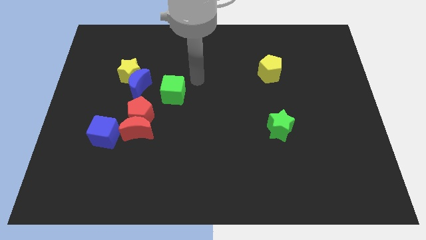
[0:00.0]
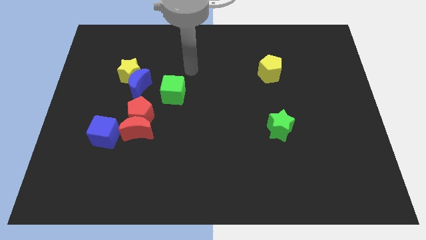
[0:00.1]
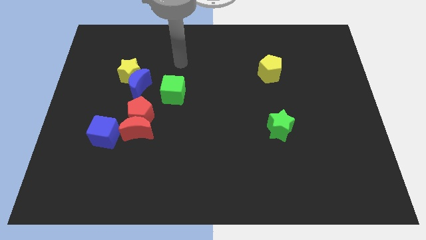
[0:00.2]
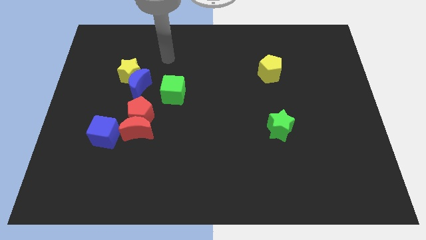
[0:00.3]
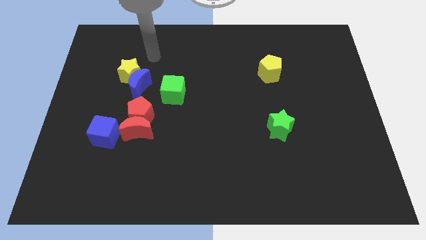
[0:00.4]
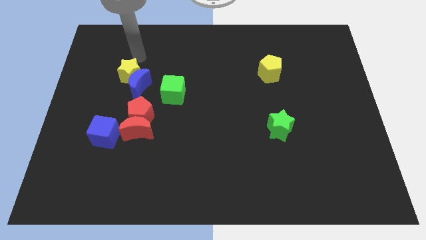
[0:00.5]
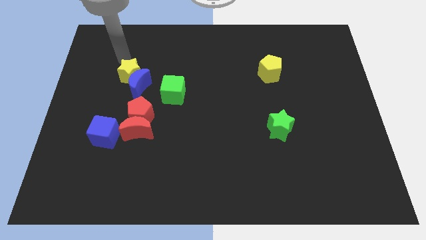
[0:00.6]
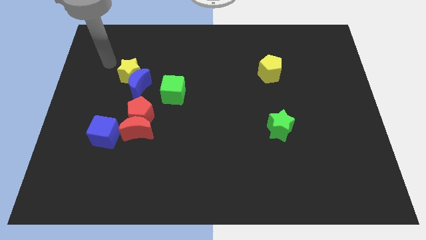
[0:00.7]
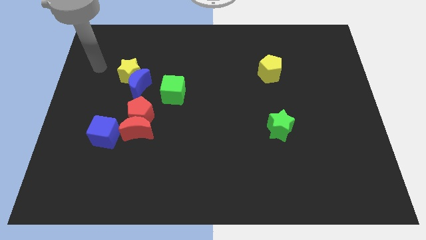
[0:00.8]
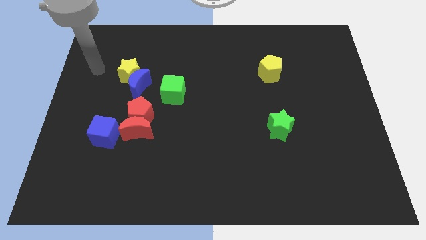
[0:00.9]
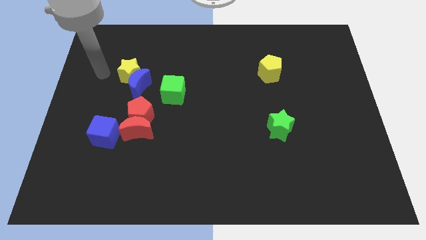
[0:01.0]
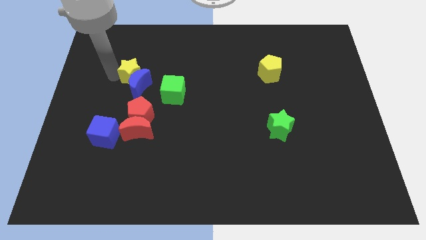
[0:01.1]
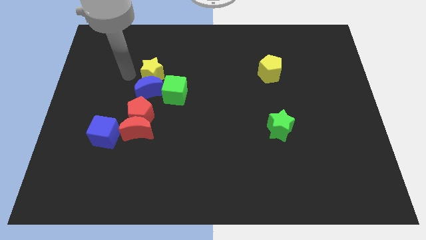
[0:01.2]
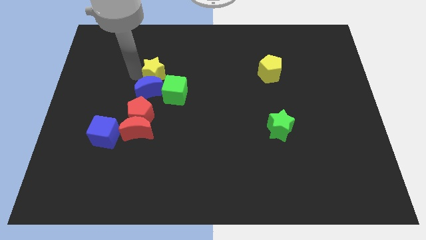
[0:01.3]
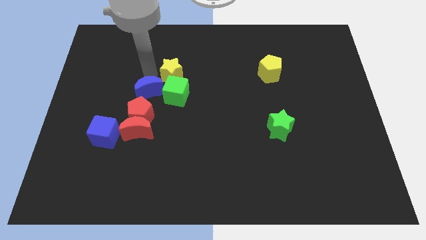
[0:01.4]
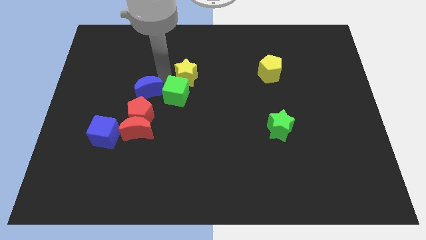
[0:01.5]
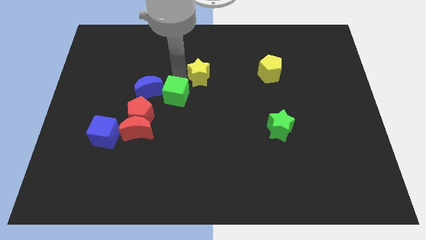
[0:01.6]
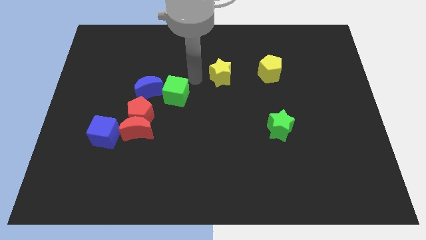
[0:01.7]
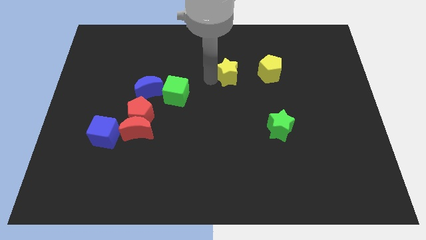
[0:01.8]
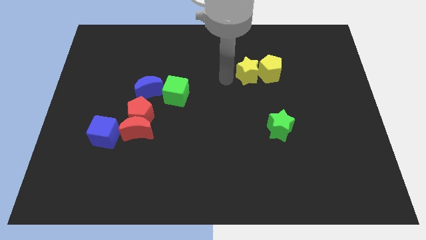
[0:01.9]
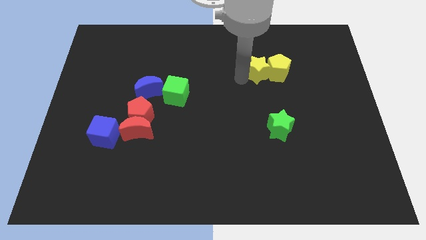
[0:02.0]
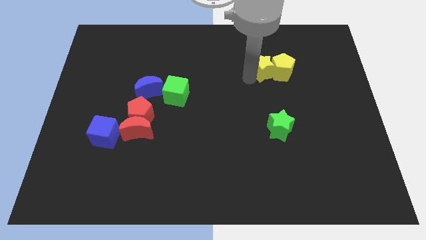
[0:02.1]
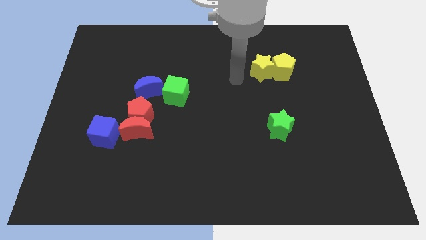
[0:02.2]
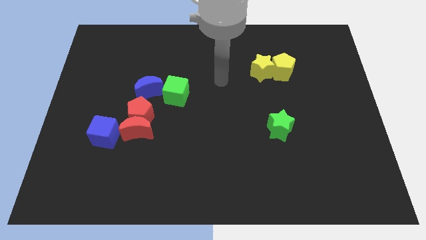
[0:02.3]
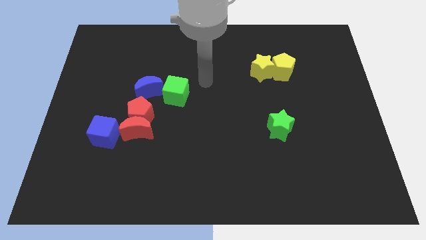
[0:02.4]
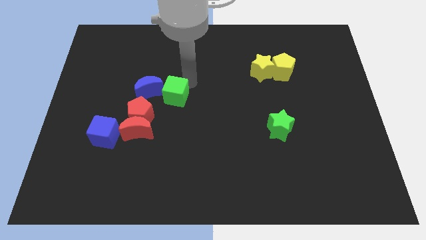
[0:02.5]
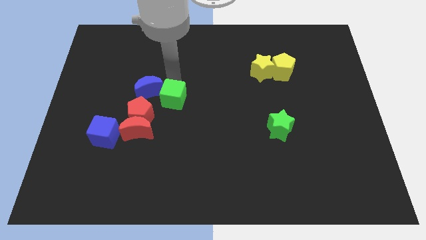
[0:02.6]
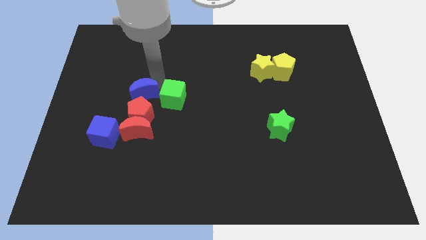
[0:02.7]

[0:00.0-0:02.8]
push the yellow star into the yellow pentagon

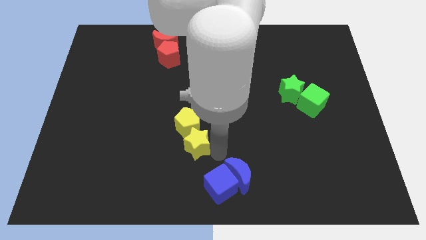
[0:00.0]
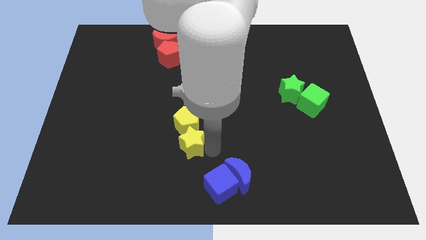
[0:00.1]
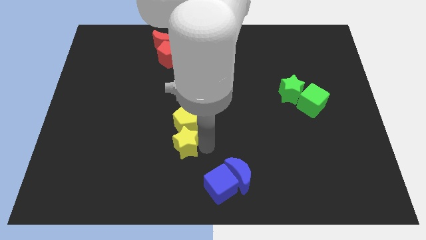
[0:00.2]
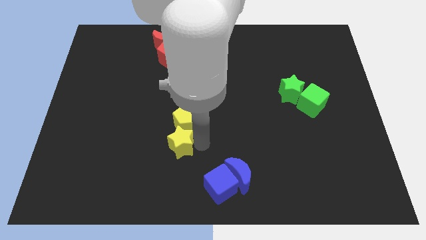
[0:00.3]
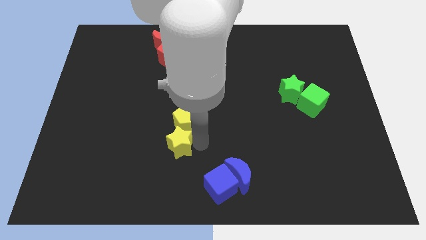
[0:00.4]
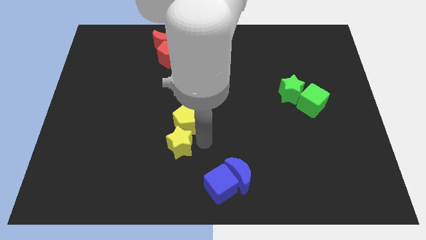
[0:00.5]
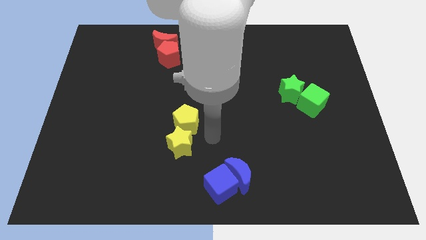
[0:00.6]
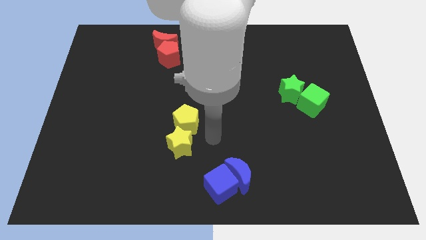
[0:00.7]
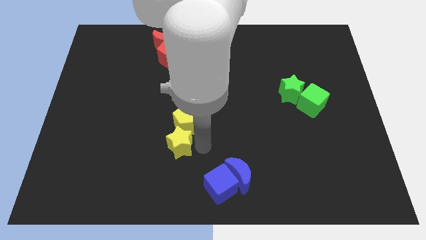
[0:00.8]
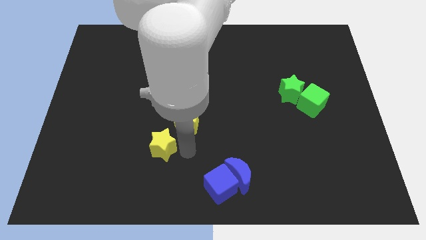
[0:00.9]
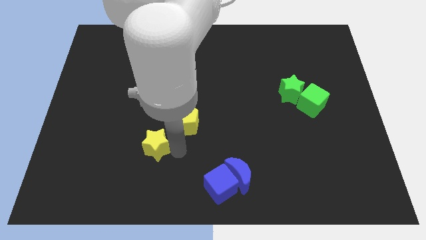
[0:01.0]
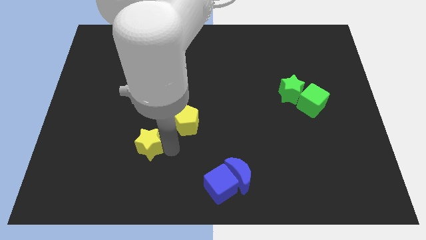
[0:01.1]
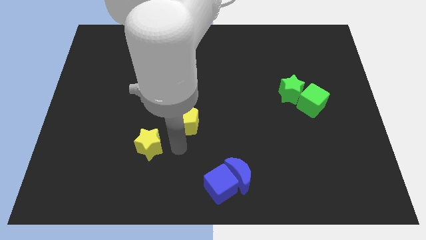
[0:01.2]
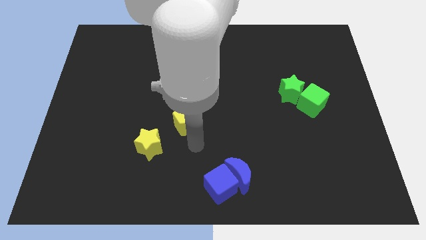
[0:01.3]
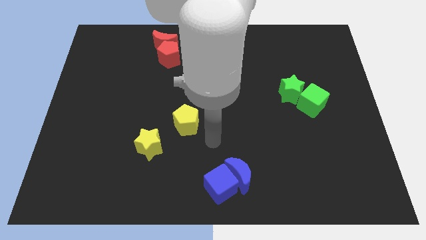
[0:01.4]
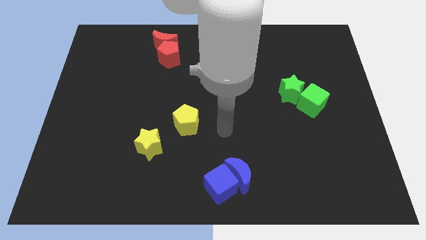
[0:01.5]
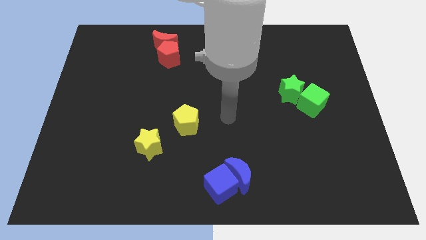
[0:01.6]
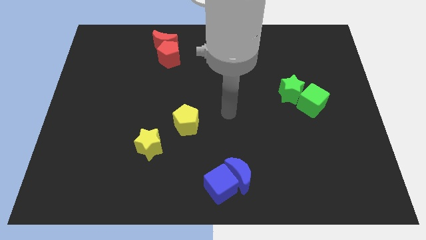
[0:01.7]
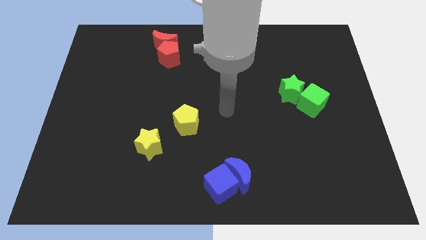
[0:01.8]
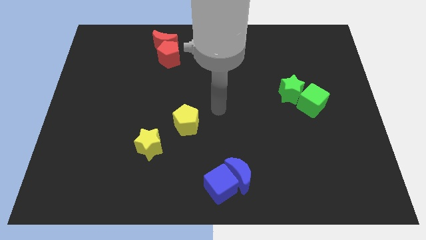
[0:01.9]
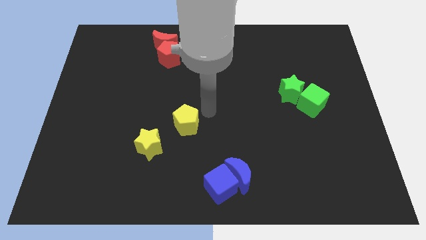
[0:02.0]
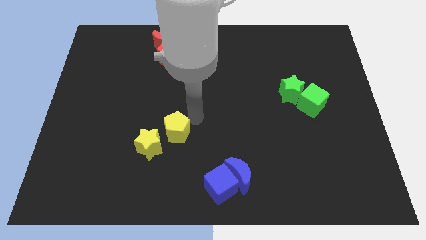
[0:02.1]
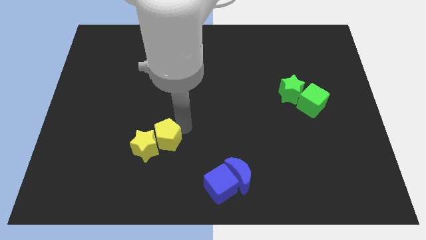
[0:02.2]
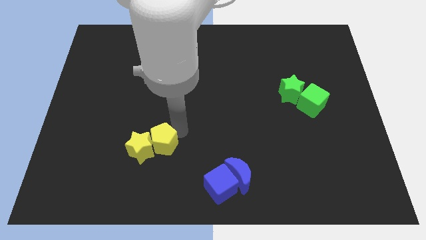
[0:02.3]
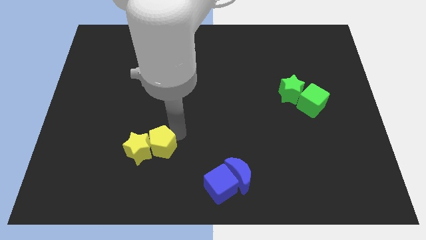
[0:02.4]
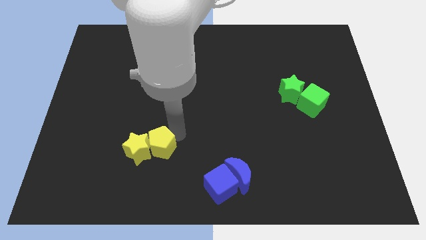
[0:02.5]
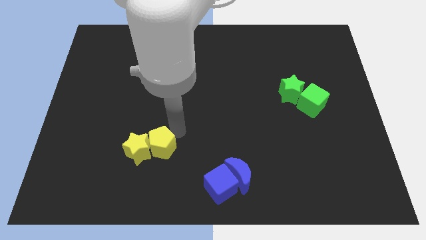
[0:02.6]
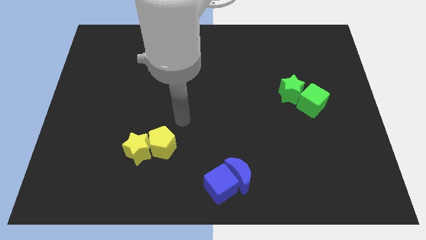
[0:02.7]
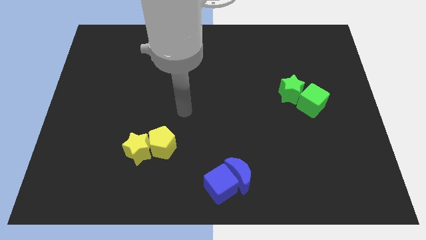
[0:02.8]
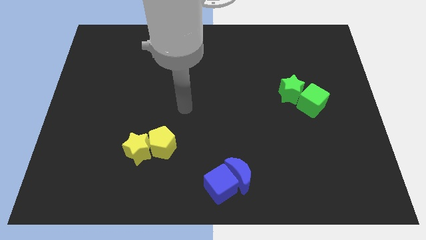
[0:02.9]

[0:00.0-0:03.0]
move the yellow blocks to the left of the board

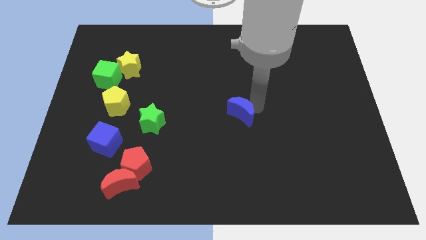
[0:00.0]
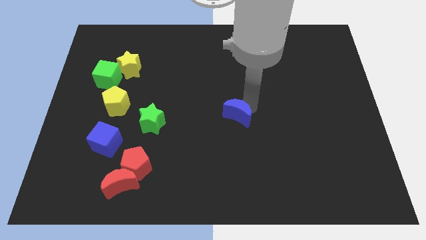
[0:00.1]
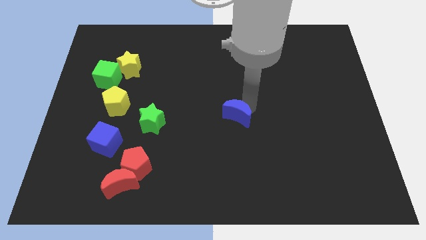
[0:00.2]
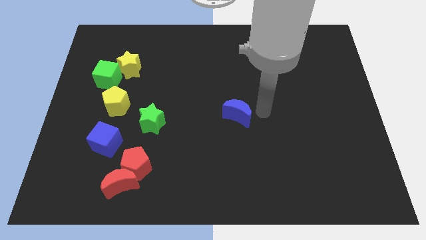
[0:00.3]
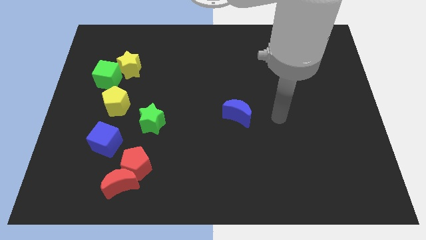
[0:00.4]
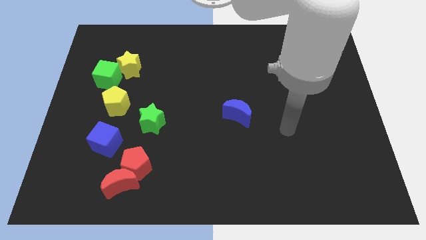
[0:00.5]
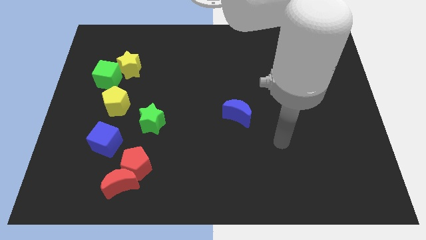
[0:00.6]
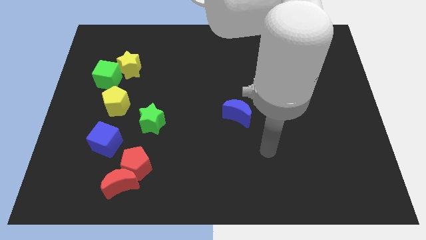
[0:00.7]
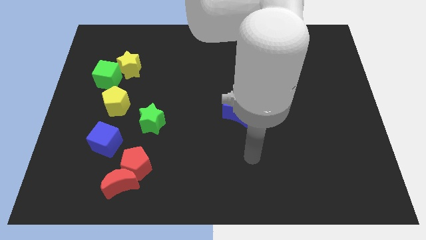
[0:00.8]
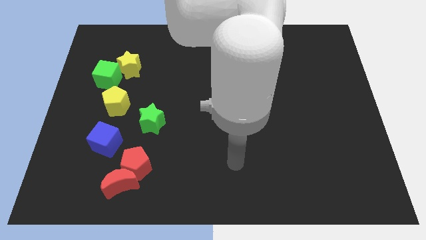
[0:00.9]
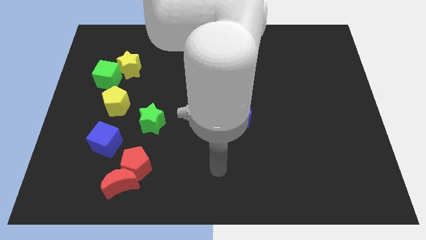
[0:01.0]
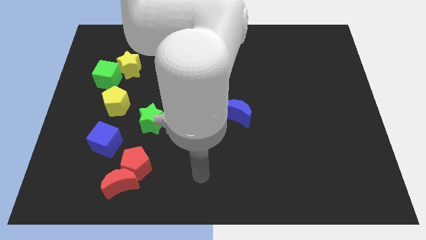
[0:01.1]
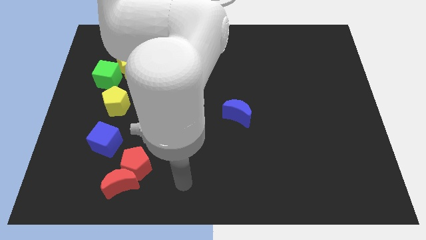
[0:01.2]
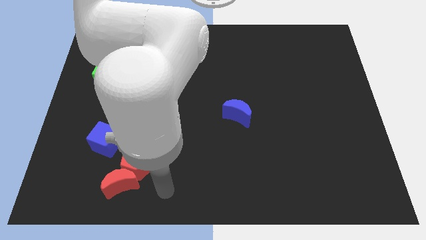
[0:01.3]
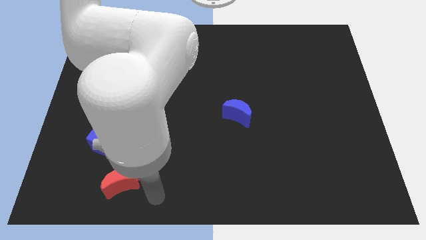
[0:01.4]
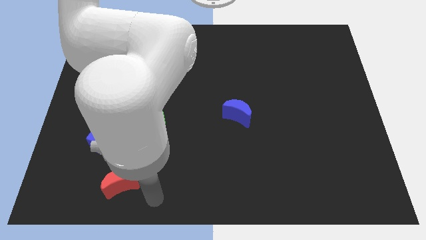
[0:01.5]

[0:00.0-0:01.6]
move your arm away from the blue moon

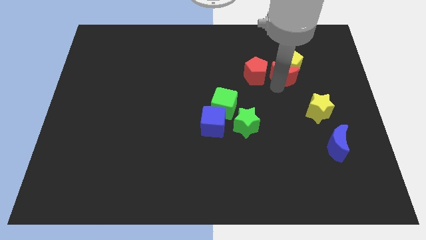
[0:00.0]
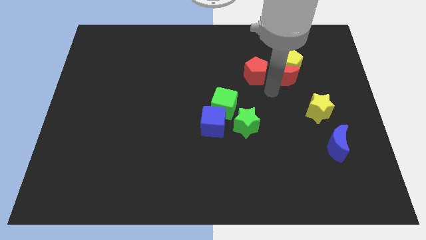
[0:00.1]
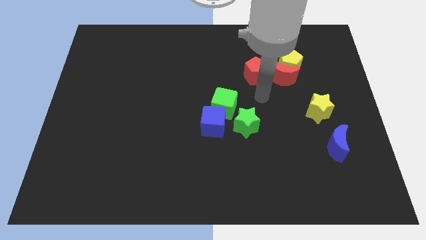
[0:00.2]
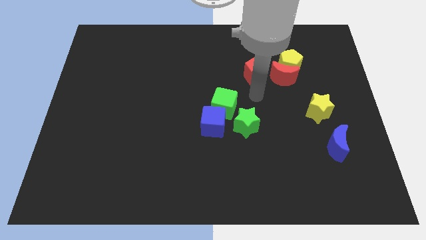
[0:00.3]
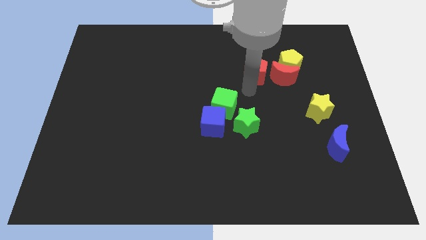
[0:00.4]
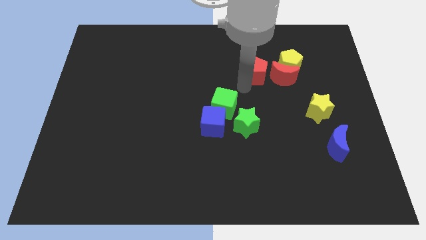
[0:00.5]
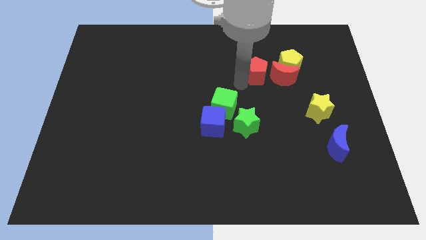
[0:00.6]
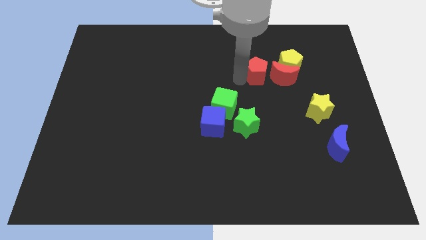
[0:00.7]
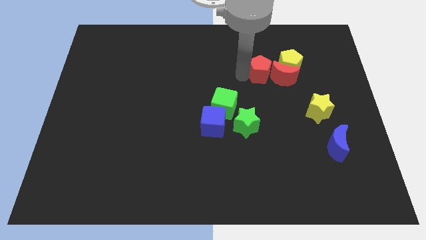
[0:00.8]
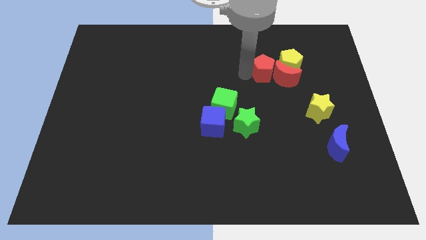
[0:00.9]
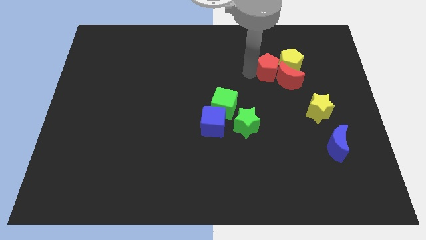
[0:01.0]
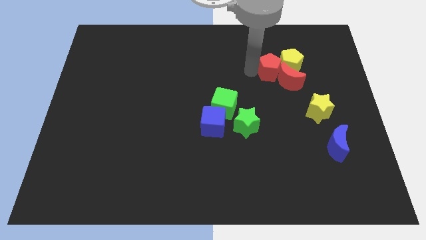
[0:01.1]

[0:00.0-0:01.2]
push red pentagon left to red moon

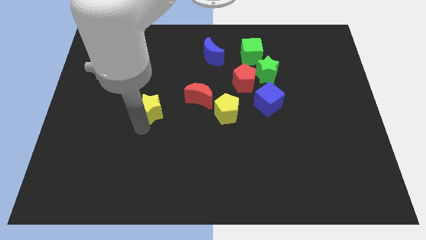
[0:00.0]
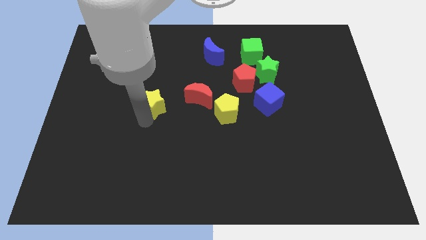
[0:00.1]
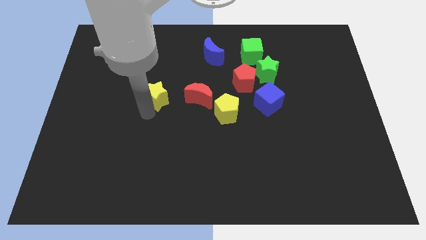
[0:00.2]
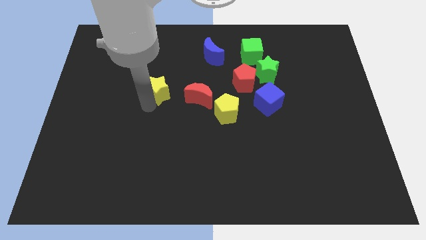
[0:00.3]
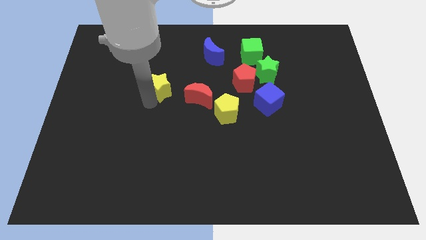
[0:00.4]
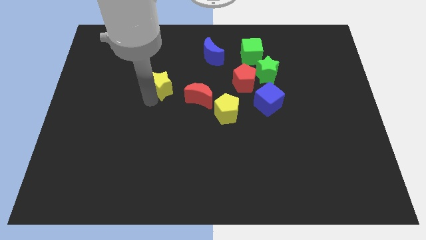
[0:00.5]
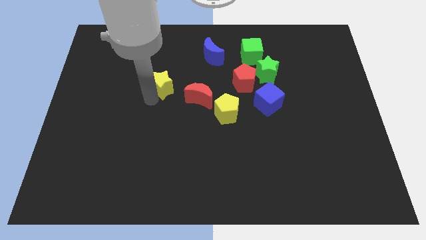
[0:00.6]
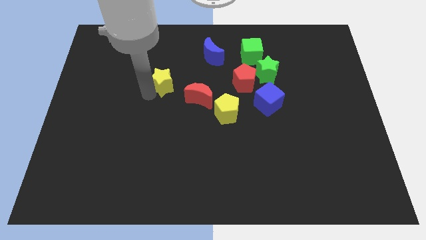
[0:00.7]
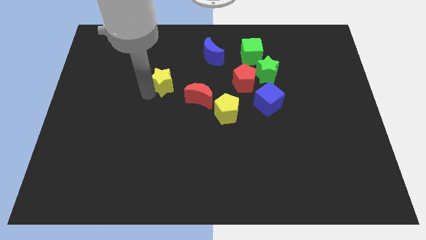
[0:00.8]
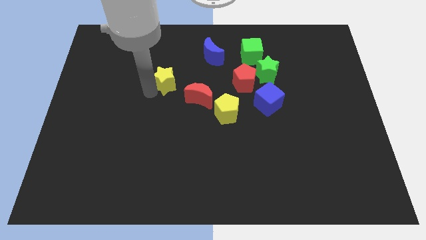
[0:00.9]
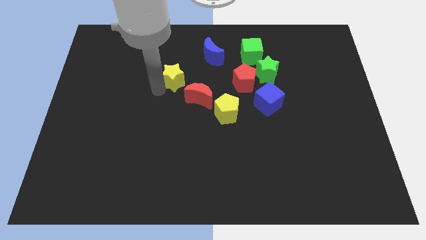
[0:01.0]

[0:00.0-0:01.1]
place the yellow star top left to the red moon
